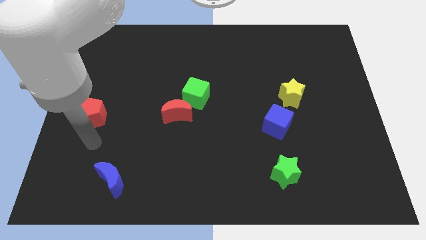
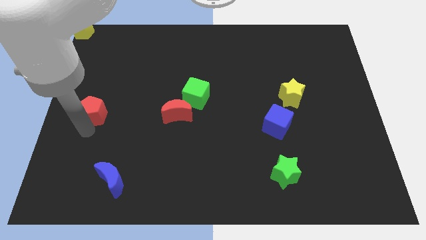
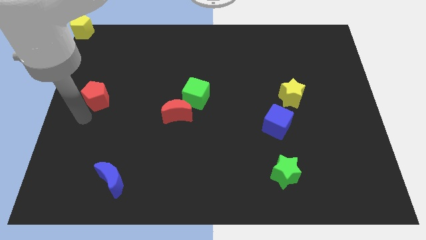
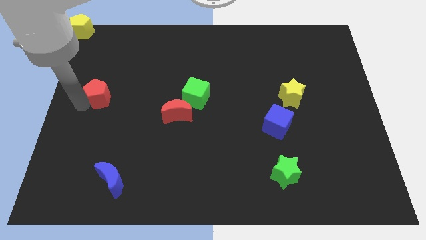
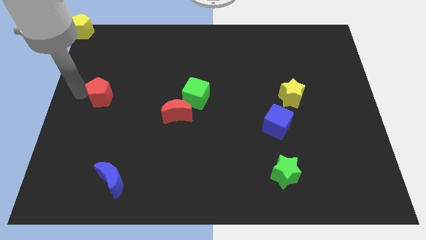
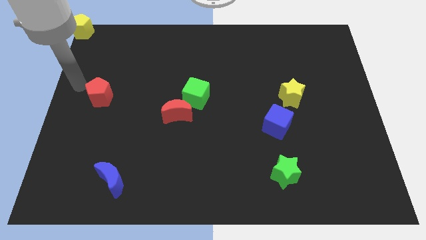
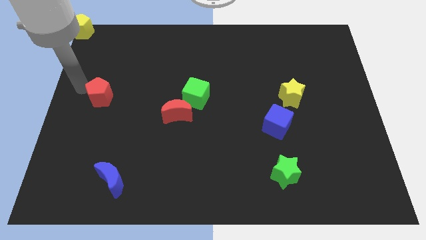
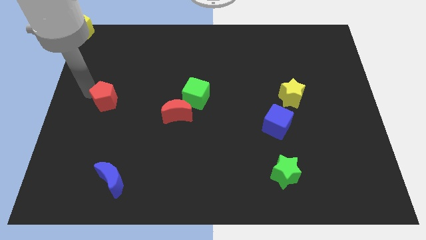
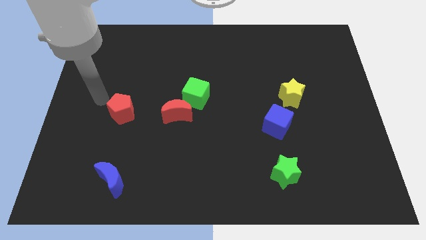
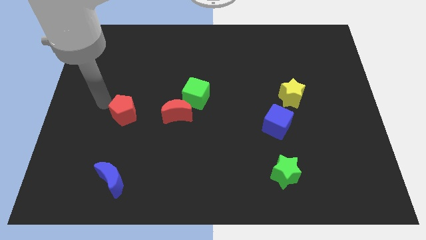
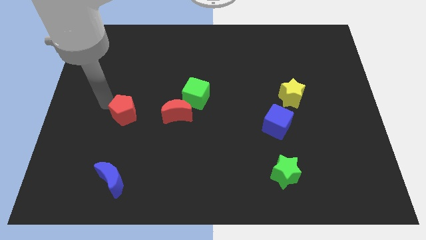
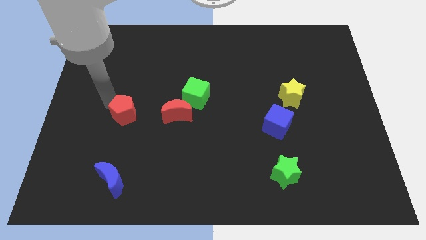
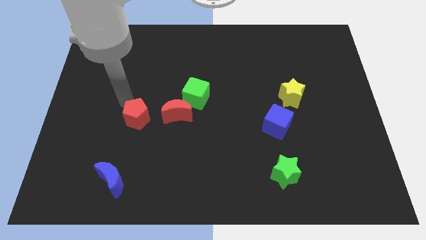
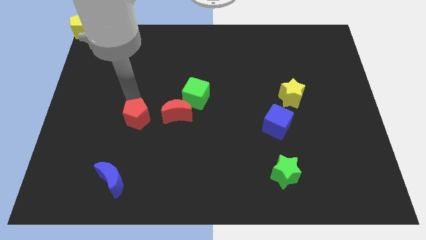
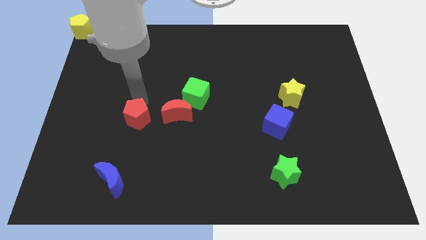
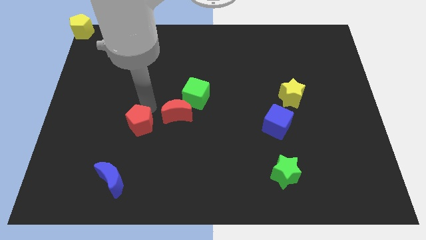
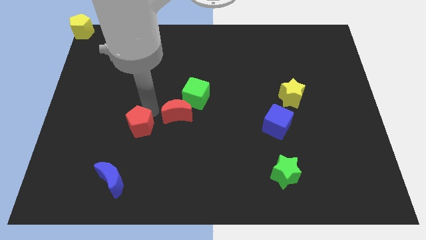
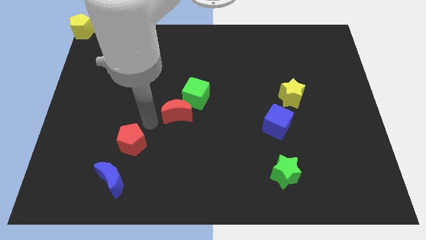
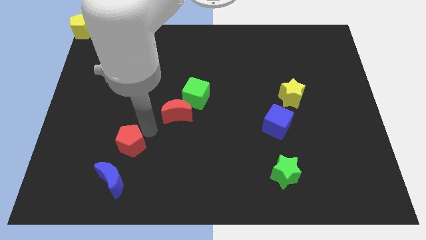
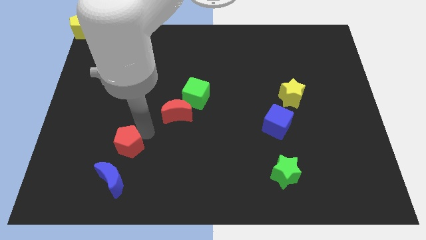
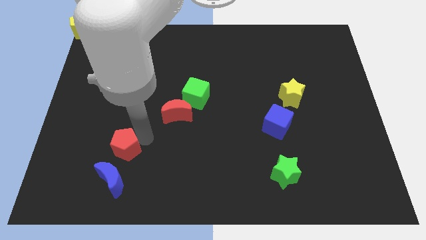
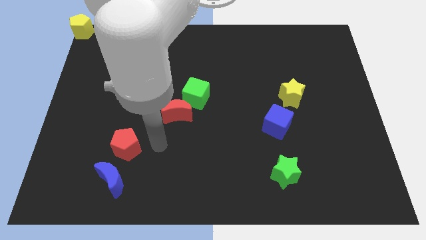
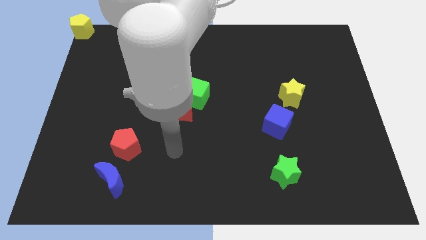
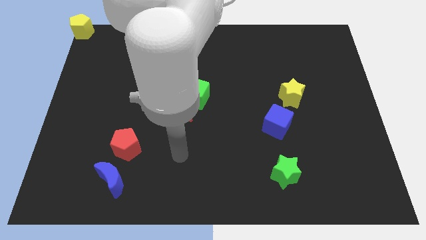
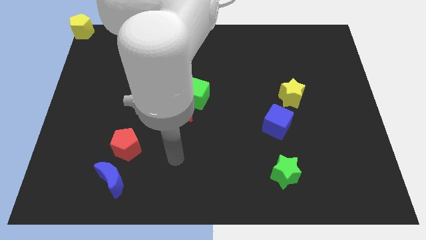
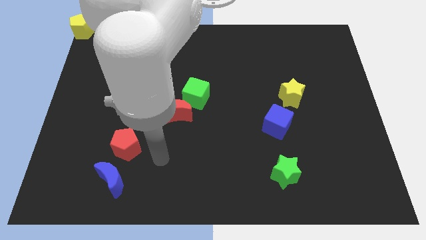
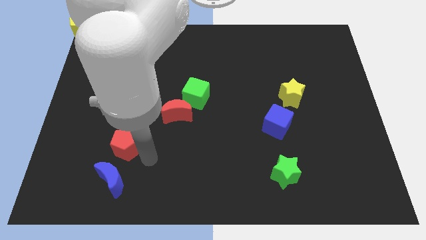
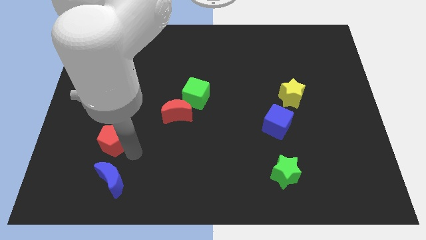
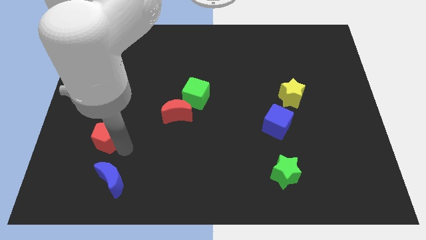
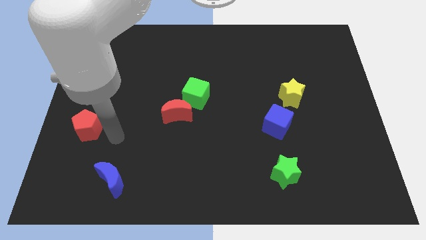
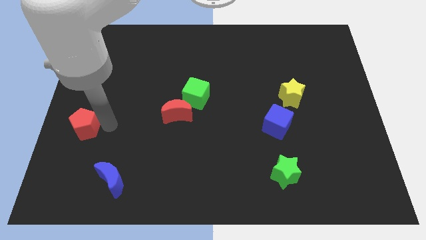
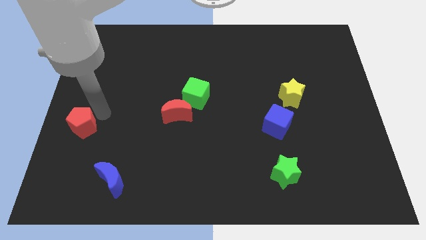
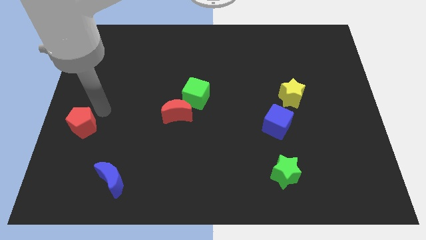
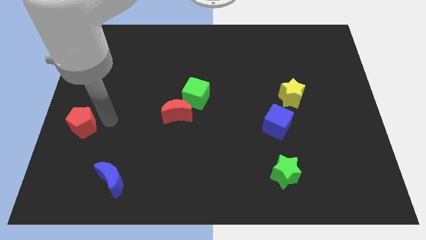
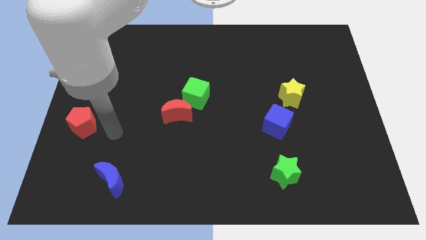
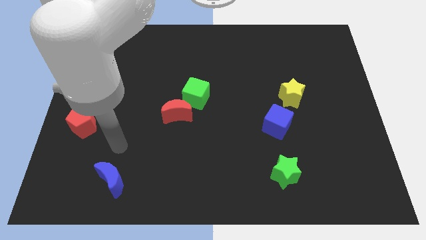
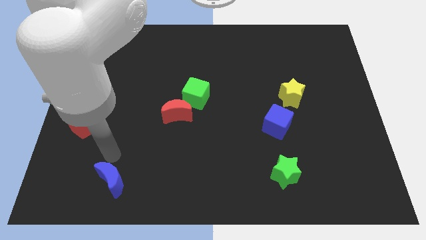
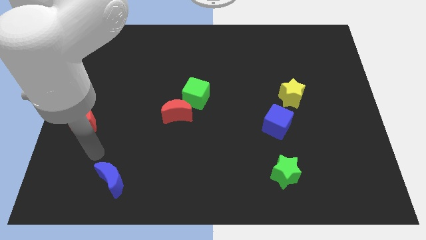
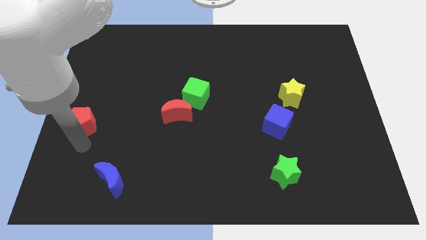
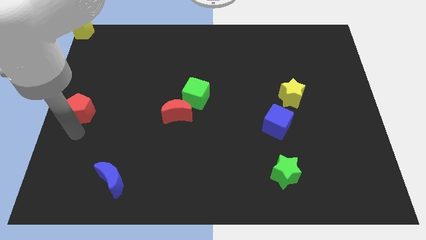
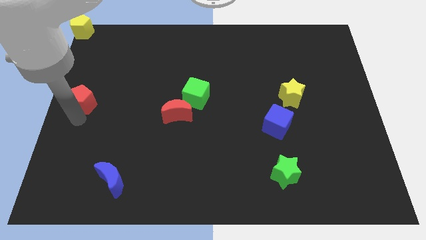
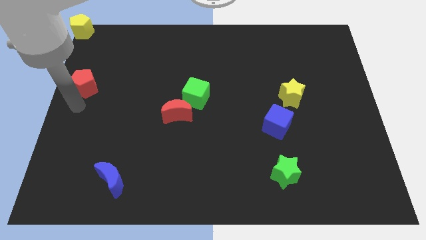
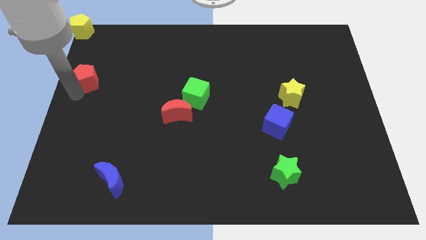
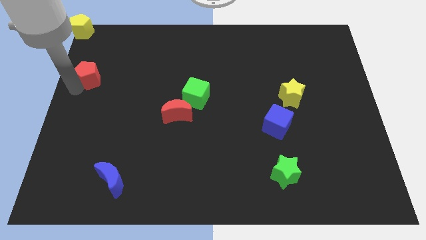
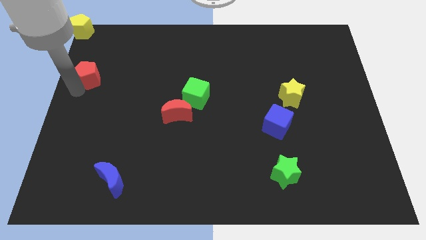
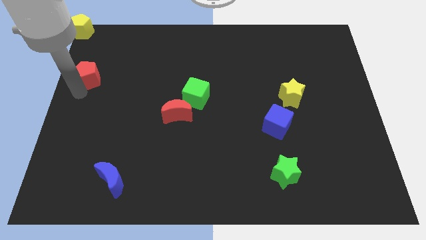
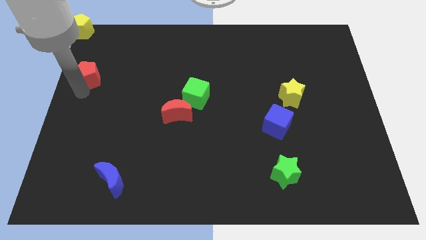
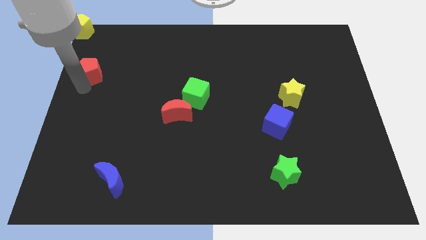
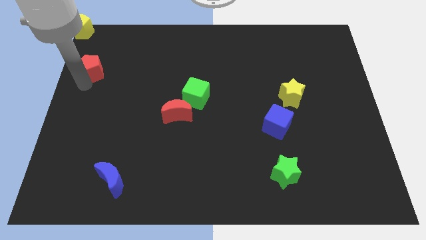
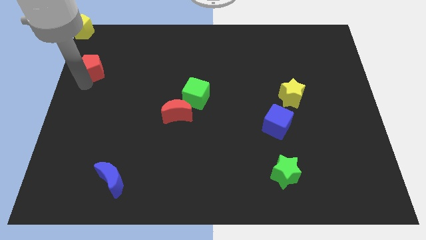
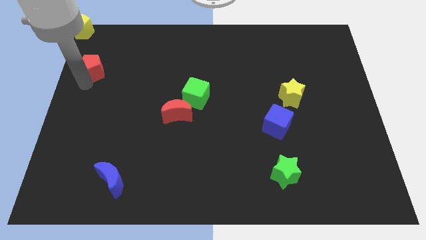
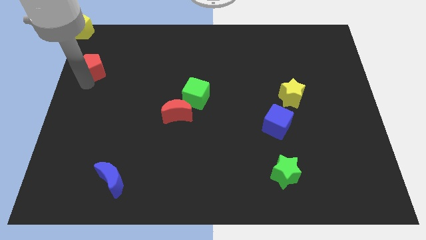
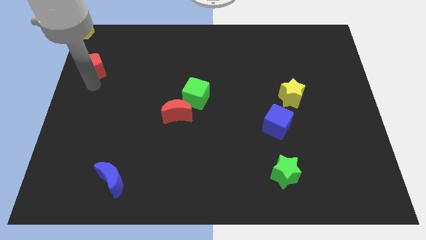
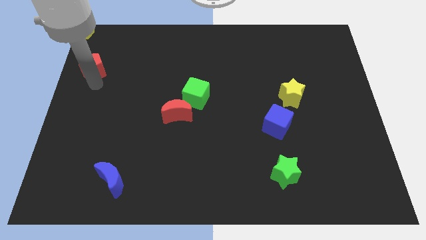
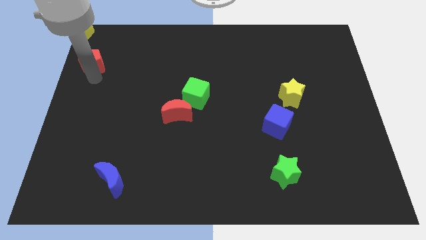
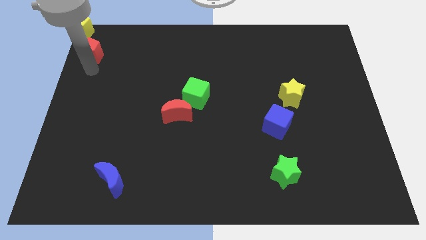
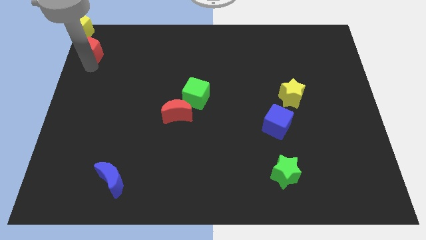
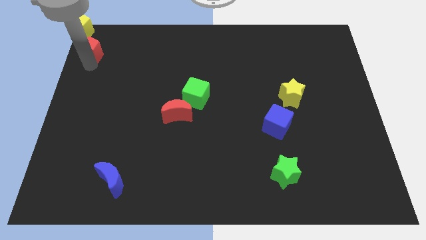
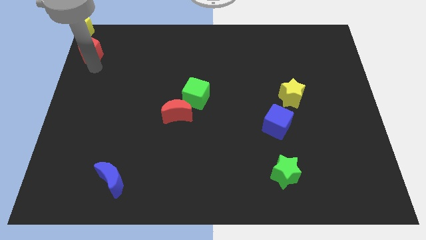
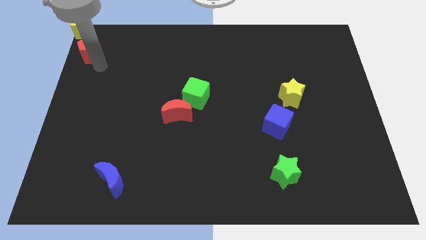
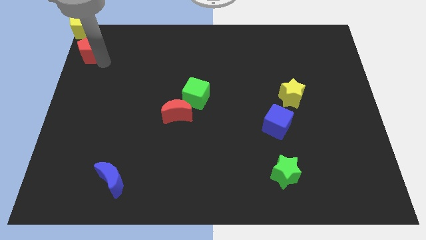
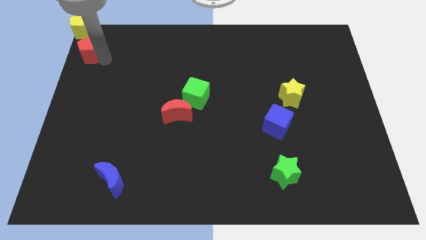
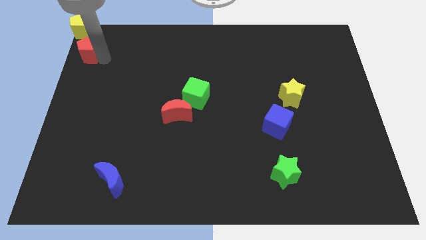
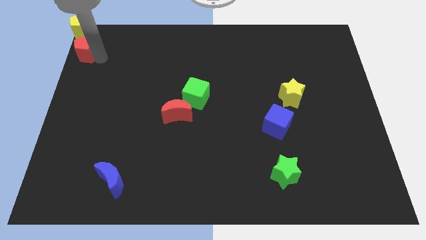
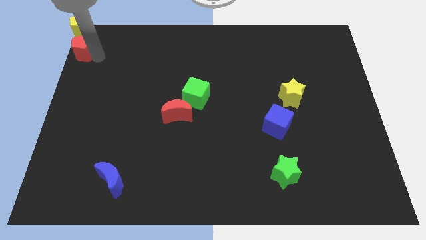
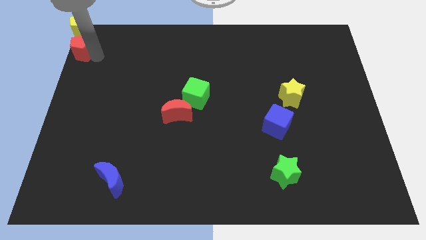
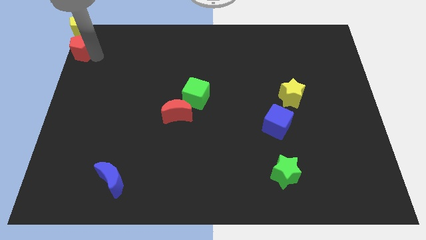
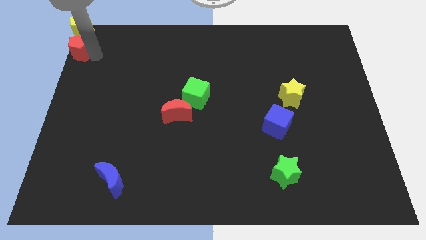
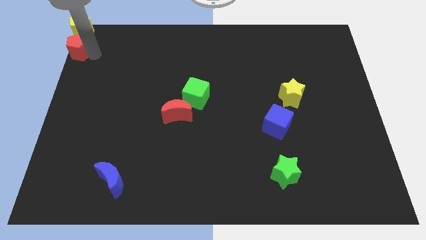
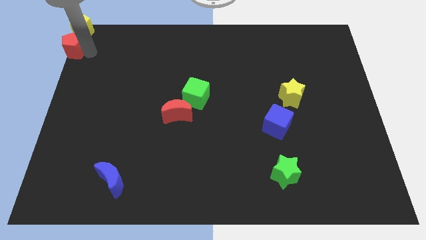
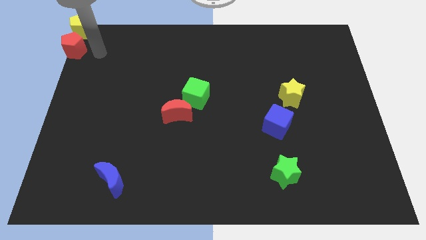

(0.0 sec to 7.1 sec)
move the red pentagon below the yellow pentagon to the top left corner of the board

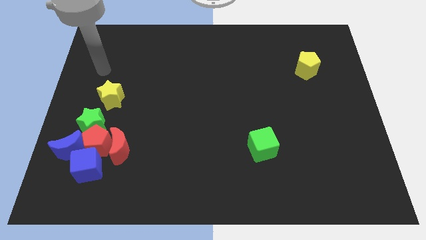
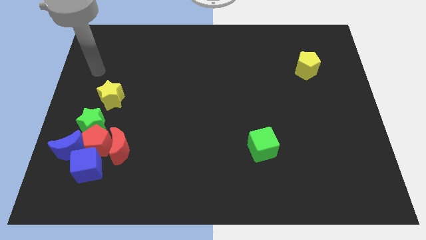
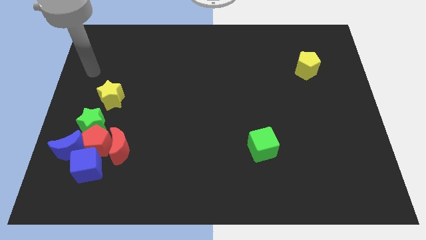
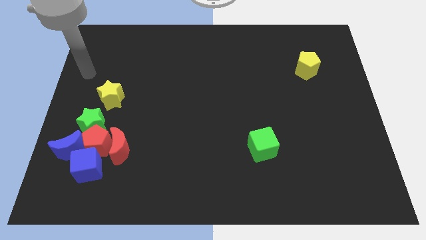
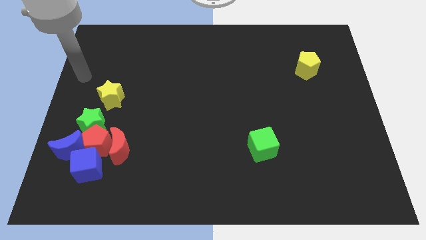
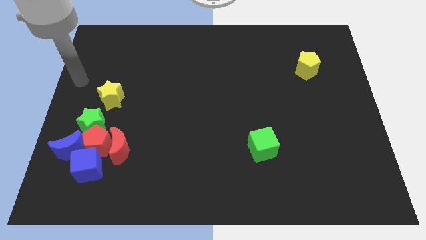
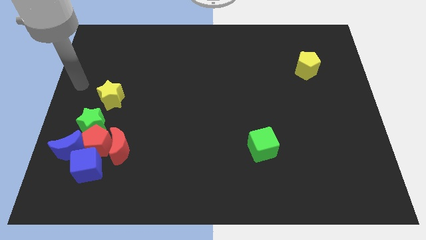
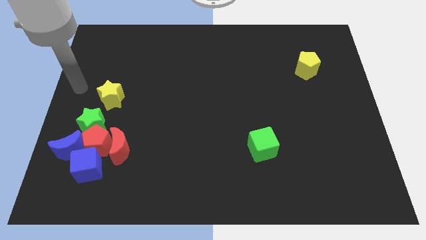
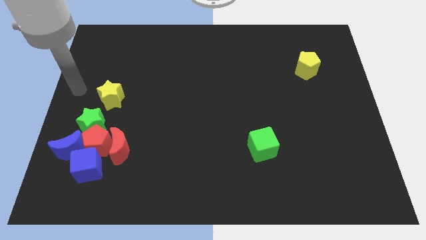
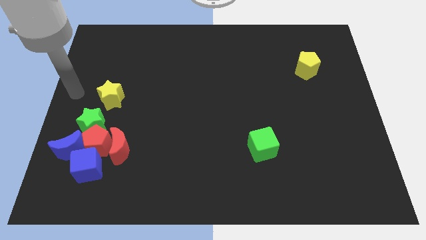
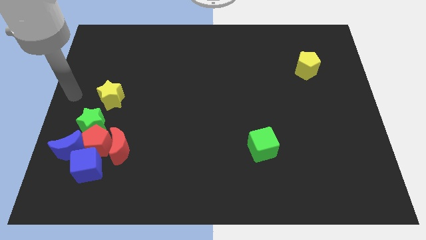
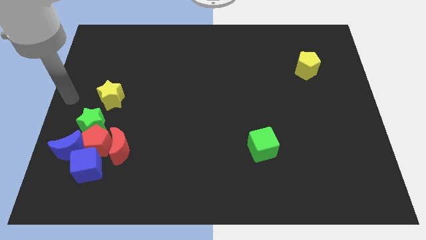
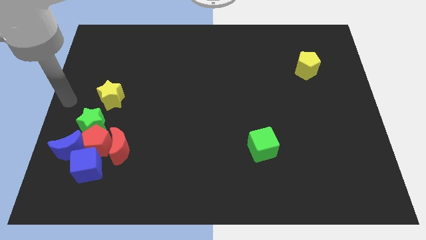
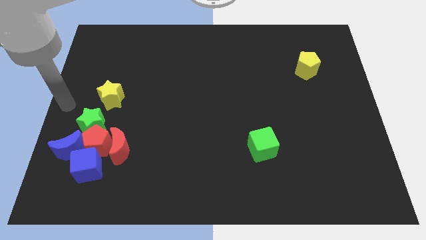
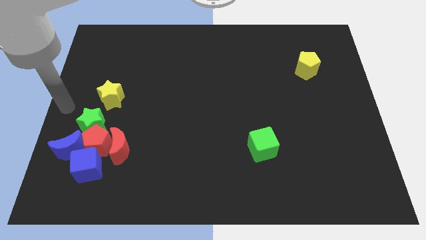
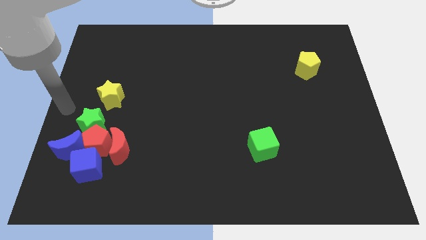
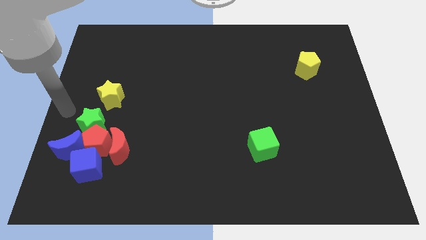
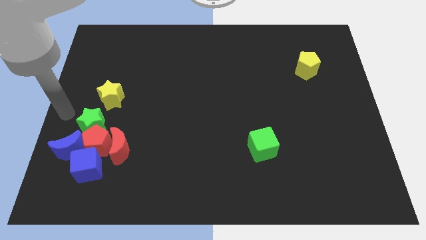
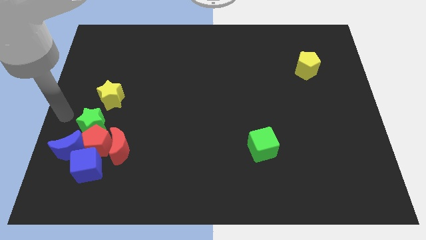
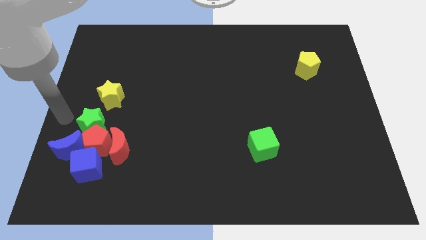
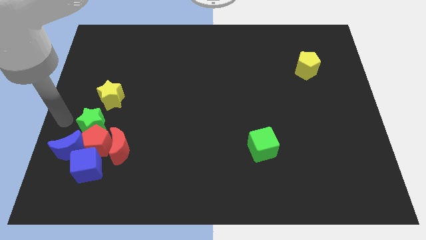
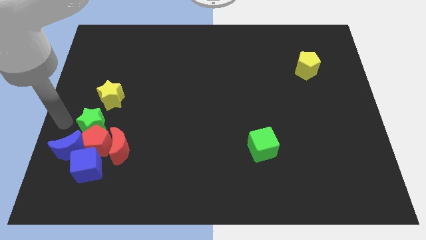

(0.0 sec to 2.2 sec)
move your arm left to the green star
